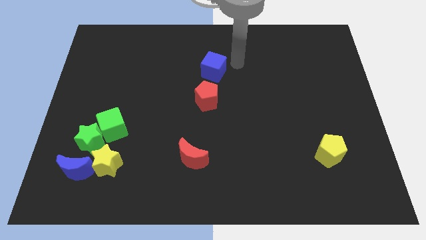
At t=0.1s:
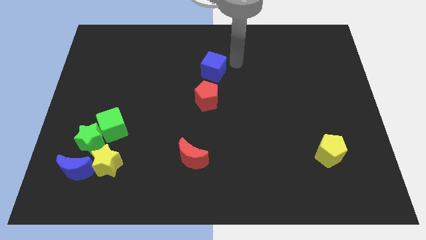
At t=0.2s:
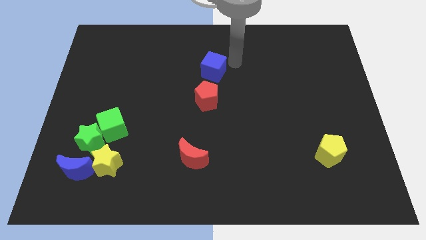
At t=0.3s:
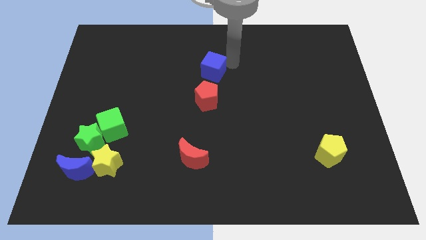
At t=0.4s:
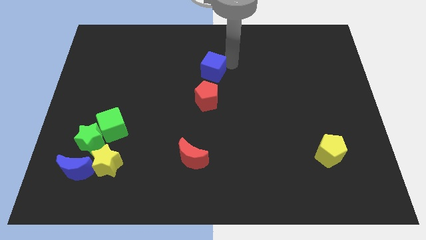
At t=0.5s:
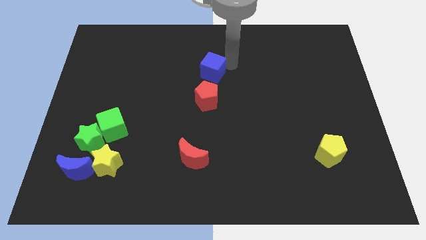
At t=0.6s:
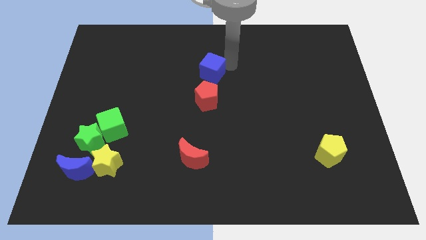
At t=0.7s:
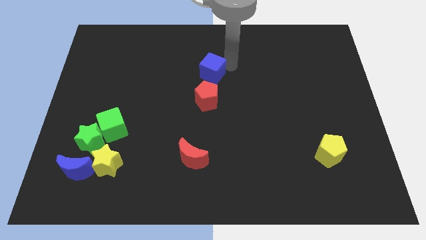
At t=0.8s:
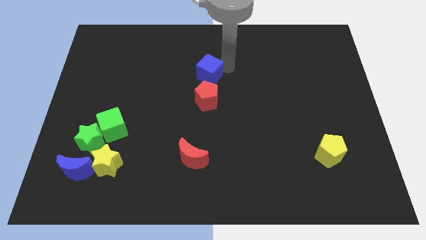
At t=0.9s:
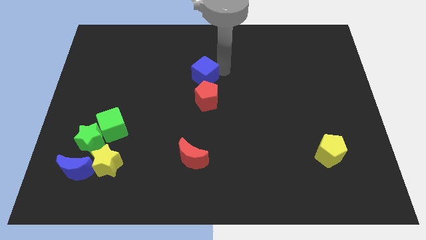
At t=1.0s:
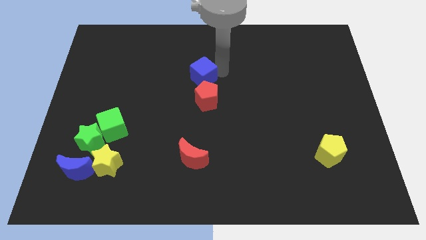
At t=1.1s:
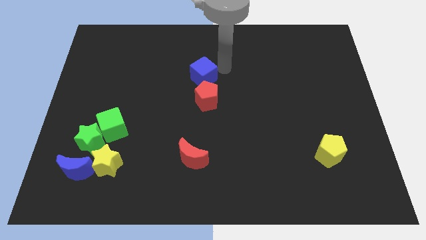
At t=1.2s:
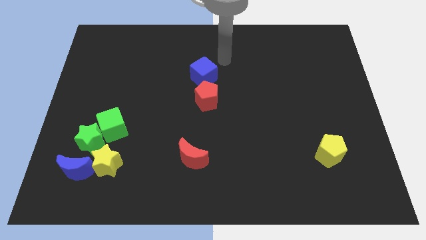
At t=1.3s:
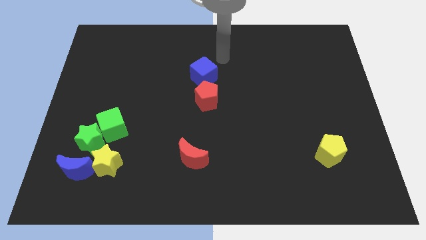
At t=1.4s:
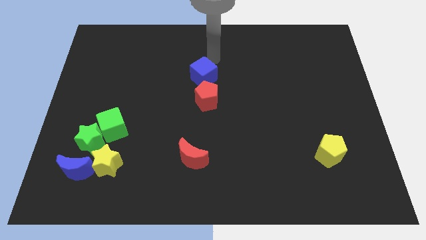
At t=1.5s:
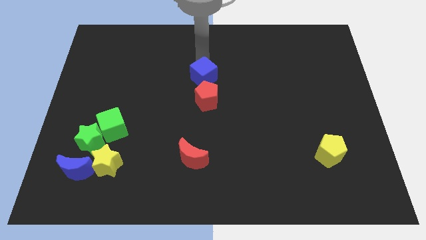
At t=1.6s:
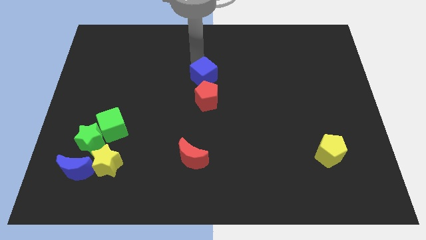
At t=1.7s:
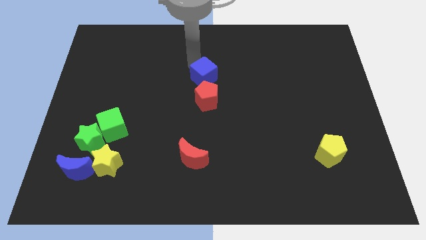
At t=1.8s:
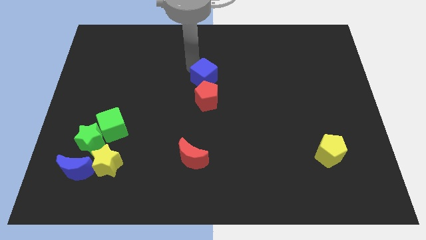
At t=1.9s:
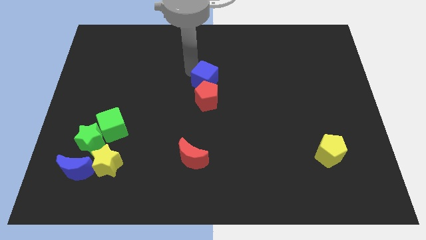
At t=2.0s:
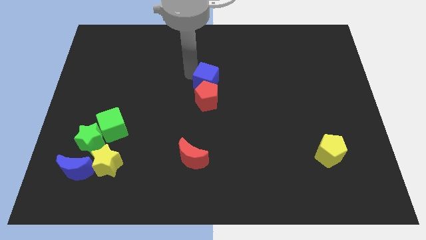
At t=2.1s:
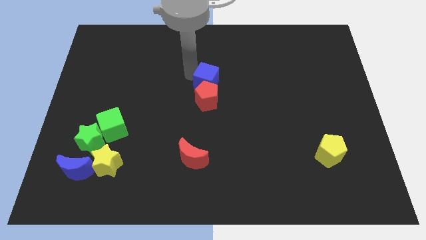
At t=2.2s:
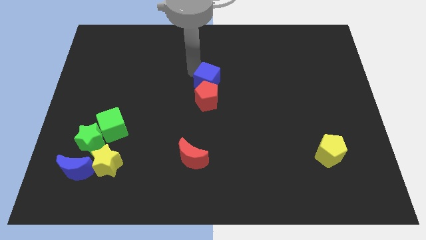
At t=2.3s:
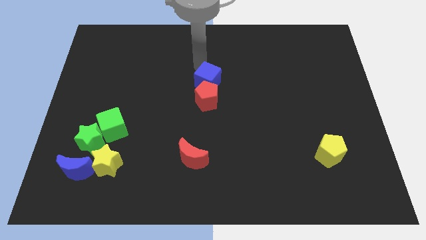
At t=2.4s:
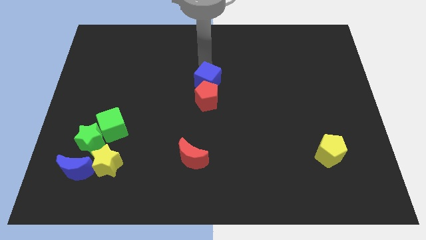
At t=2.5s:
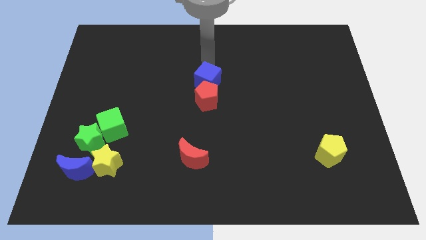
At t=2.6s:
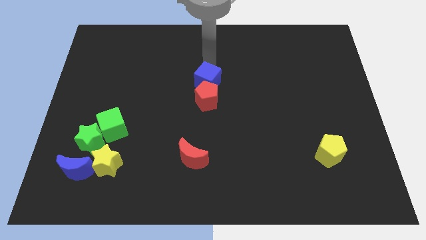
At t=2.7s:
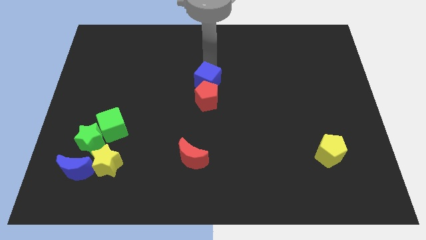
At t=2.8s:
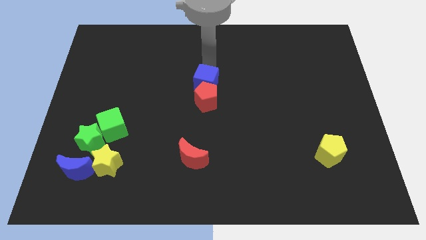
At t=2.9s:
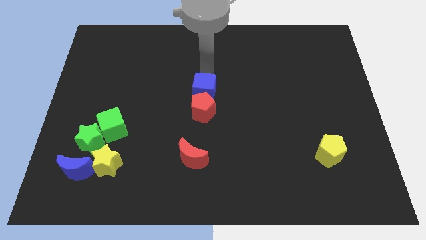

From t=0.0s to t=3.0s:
move the blue cube to the top of the red pentagon

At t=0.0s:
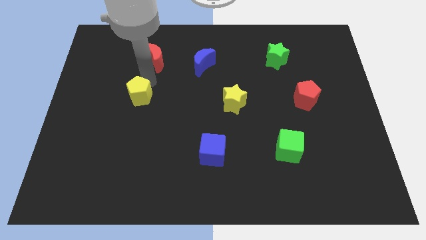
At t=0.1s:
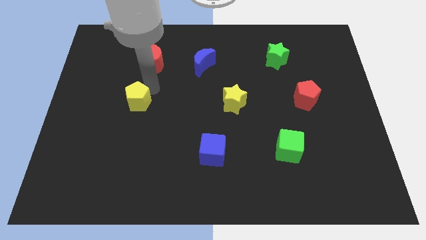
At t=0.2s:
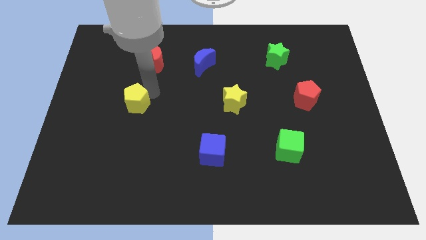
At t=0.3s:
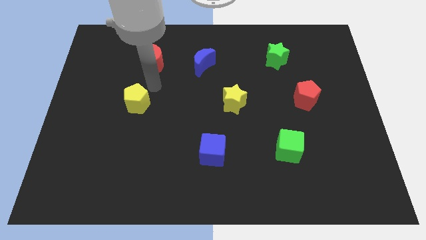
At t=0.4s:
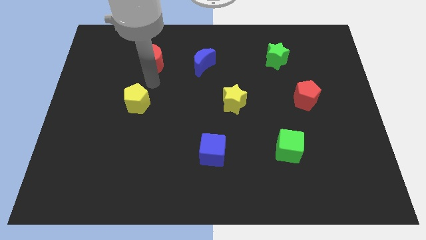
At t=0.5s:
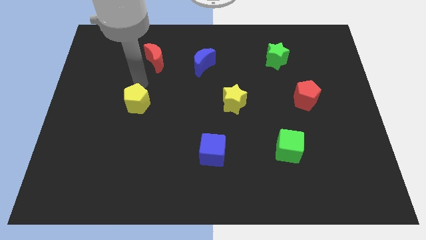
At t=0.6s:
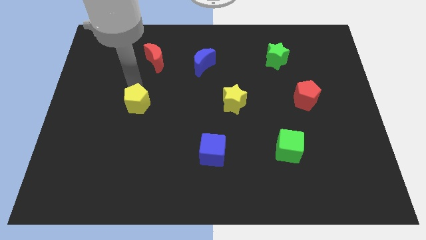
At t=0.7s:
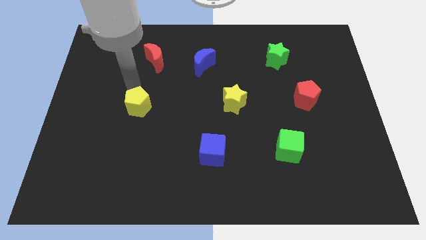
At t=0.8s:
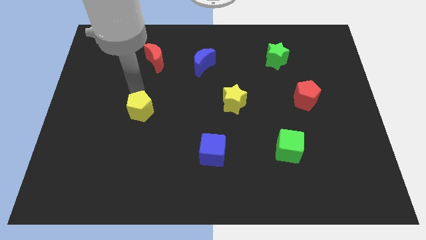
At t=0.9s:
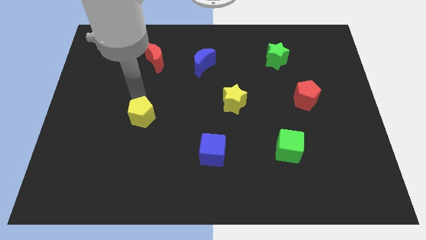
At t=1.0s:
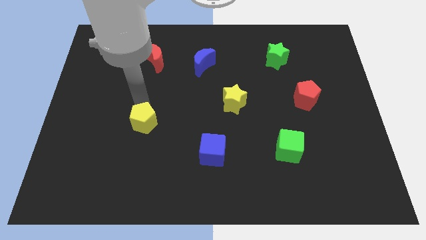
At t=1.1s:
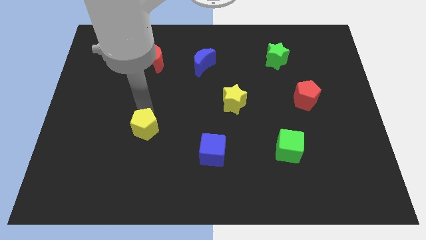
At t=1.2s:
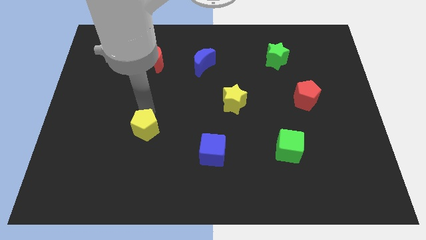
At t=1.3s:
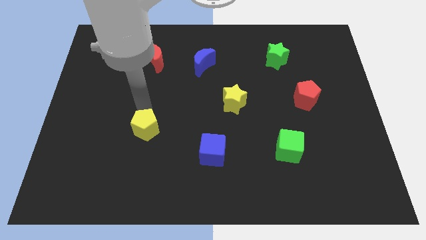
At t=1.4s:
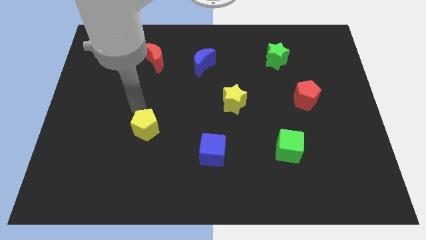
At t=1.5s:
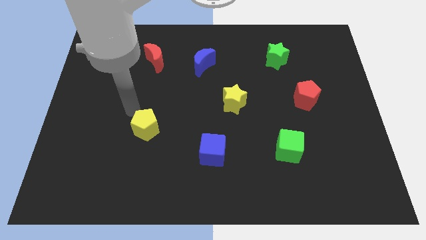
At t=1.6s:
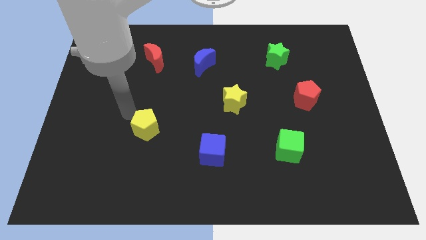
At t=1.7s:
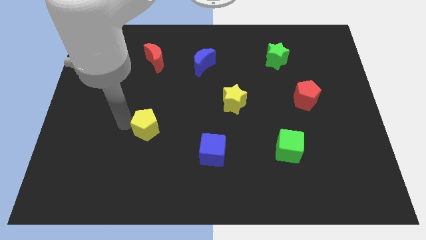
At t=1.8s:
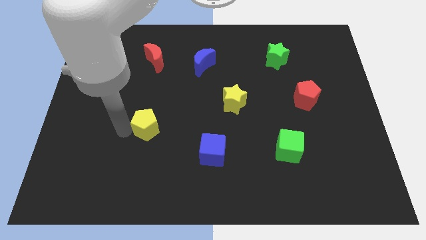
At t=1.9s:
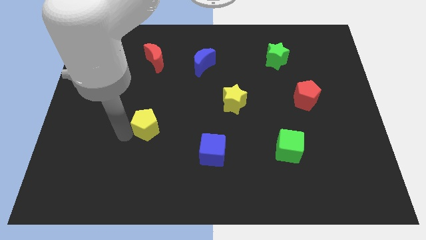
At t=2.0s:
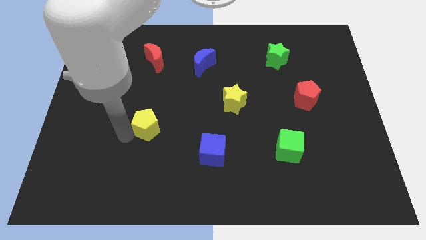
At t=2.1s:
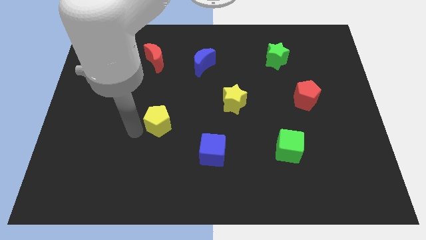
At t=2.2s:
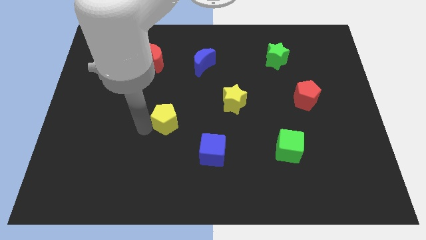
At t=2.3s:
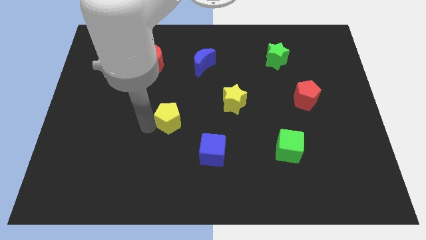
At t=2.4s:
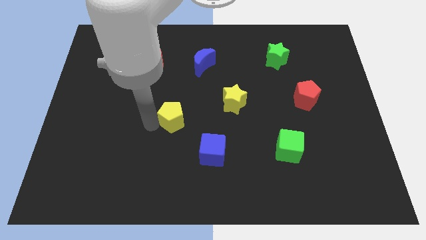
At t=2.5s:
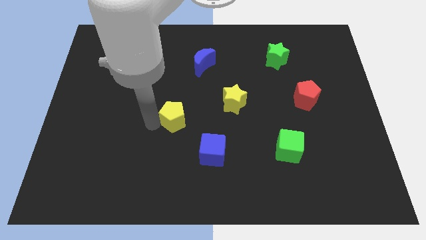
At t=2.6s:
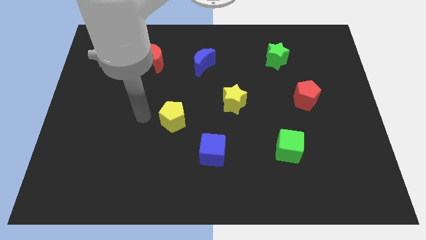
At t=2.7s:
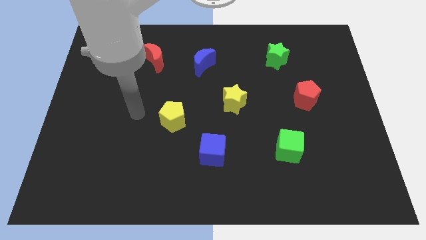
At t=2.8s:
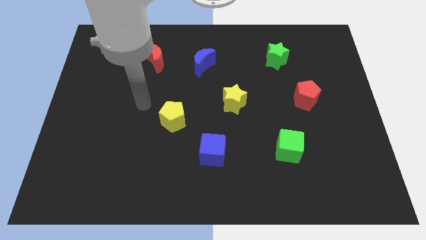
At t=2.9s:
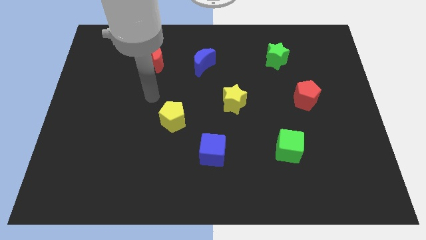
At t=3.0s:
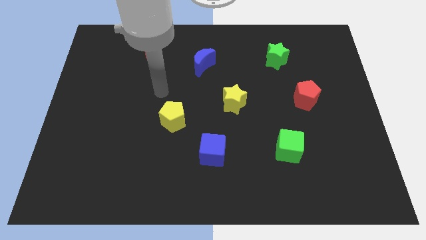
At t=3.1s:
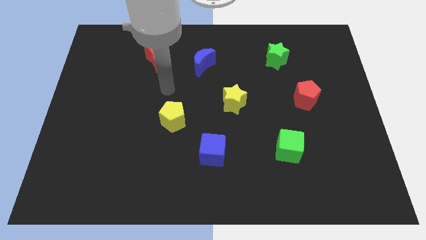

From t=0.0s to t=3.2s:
move the yellow pentagon towards the center of the board

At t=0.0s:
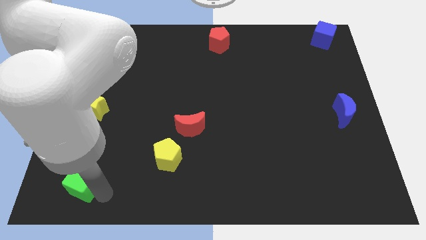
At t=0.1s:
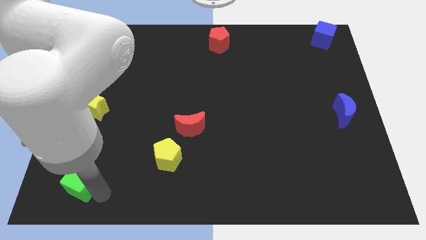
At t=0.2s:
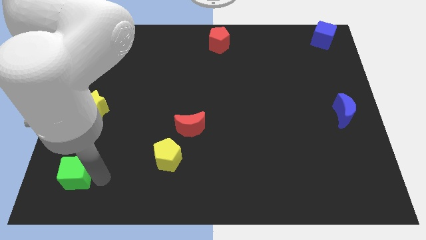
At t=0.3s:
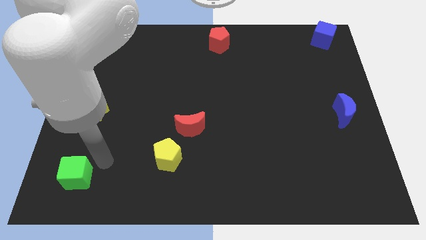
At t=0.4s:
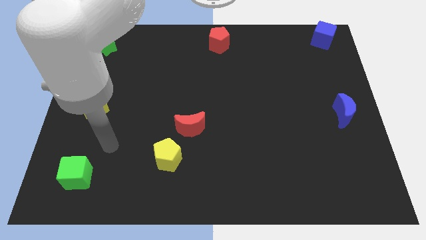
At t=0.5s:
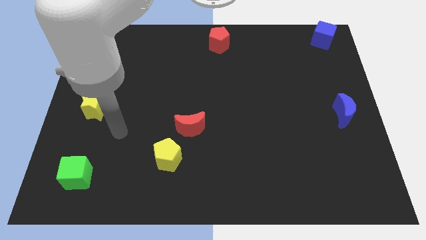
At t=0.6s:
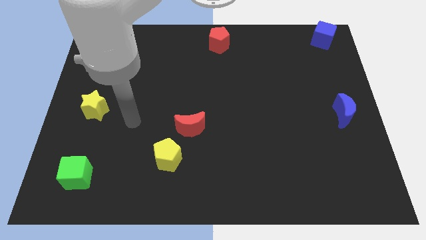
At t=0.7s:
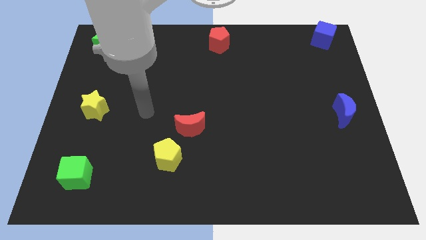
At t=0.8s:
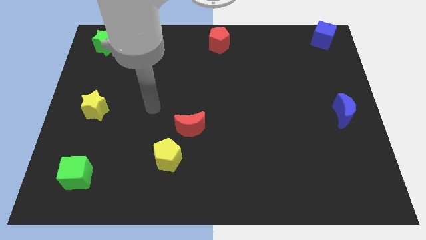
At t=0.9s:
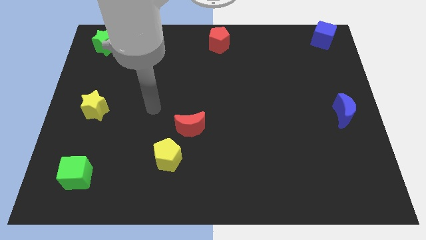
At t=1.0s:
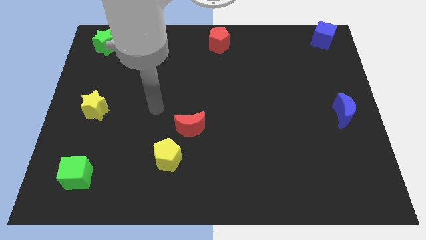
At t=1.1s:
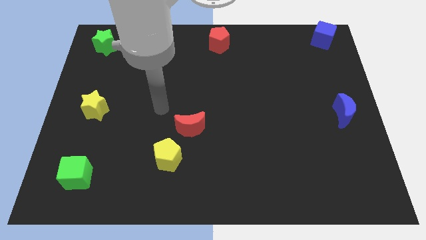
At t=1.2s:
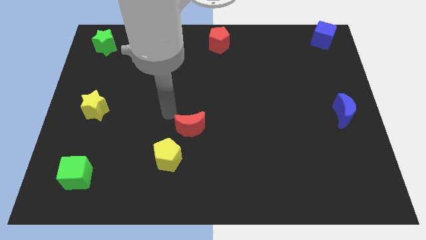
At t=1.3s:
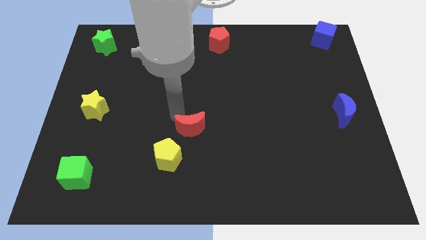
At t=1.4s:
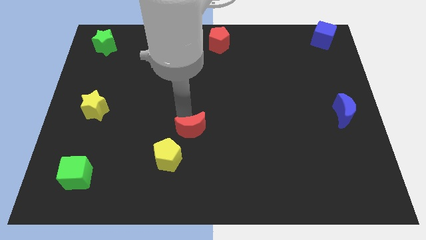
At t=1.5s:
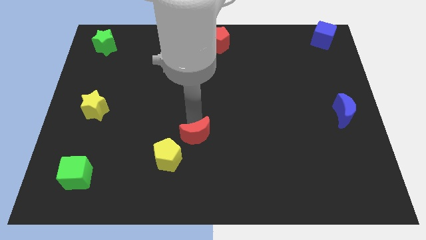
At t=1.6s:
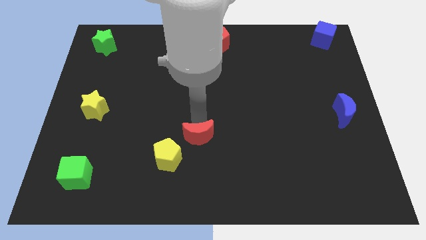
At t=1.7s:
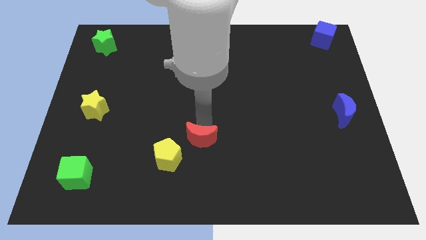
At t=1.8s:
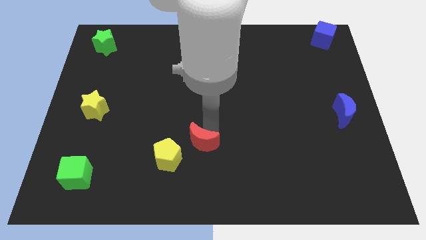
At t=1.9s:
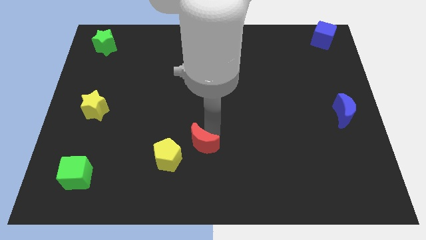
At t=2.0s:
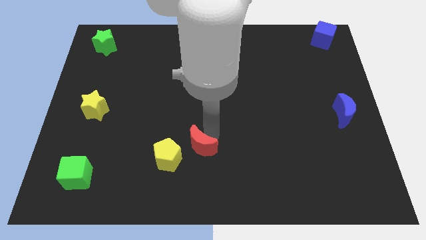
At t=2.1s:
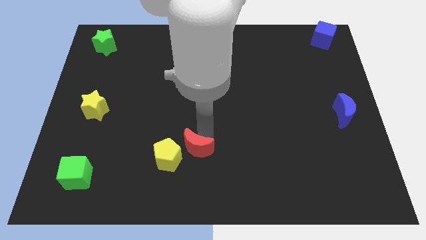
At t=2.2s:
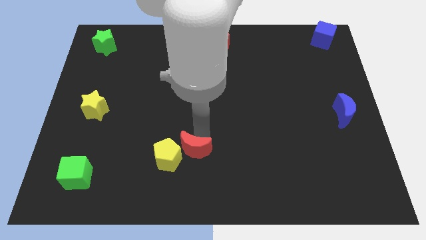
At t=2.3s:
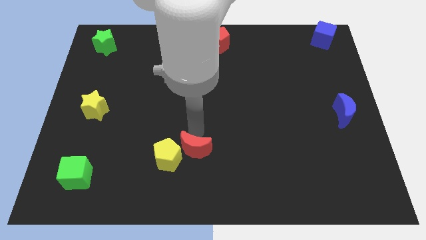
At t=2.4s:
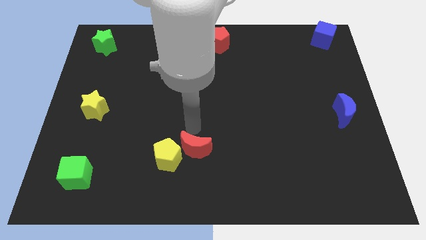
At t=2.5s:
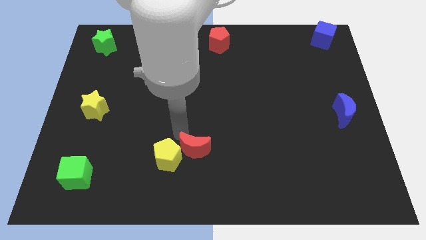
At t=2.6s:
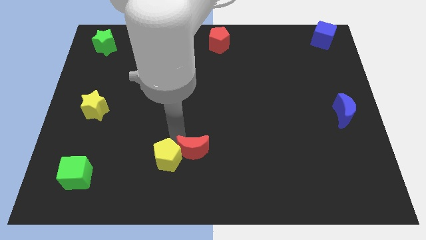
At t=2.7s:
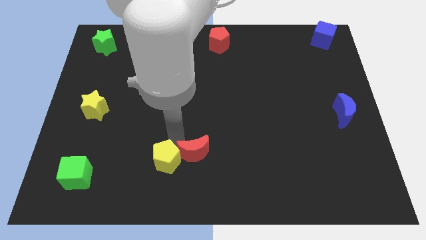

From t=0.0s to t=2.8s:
put the red moon into the yellow pentagon
